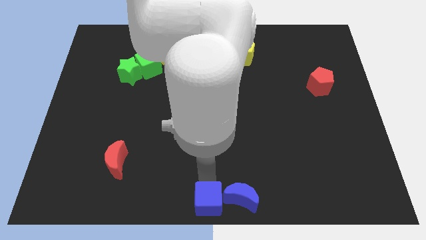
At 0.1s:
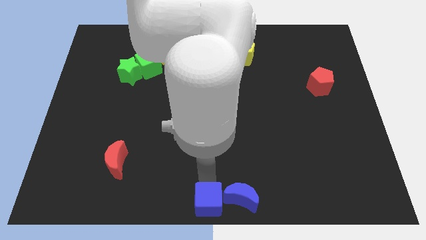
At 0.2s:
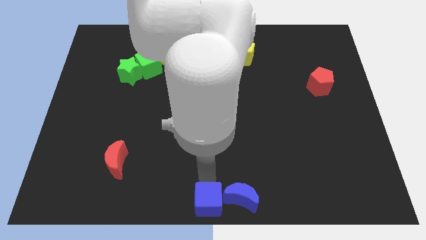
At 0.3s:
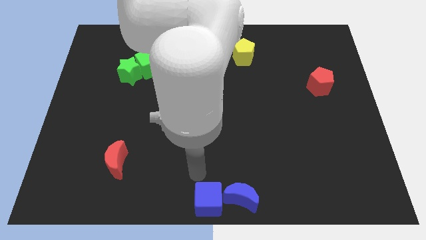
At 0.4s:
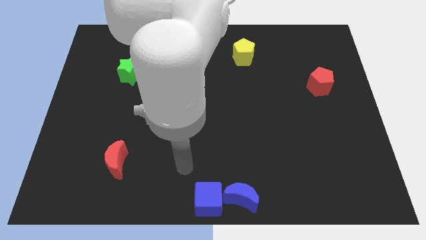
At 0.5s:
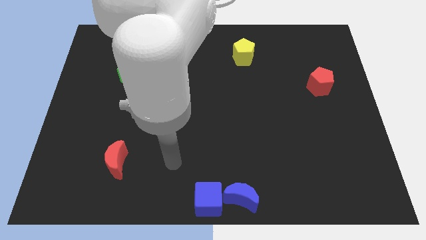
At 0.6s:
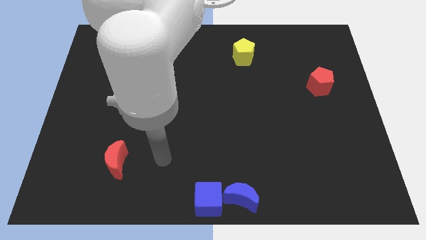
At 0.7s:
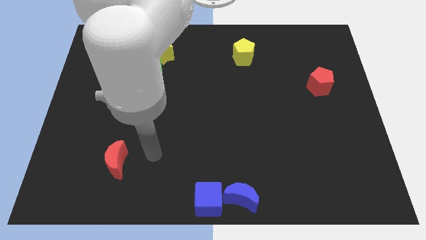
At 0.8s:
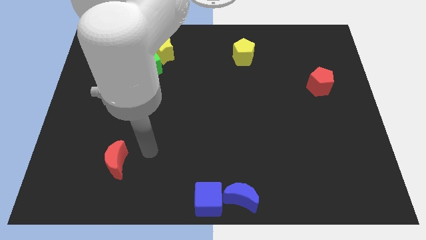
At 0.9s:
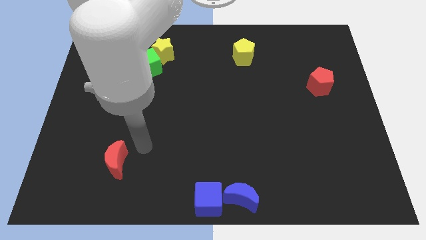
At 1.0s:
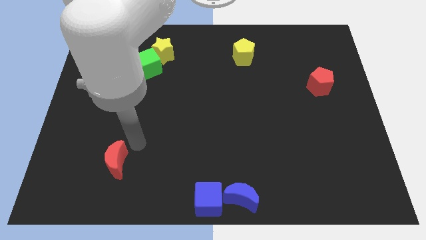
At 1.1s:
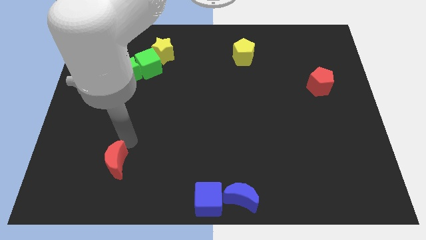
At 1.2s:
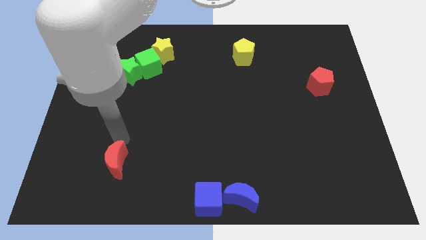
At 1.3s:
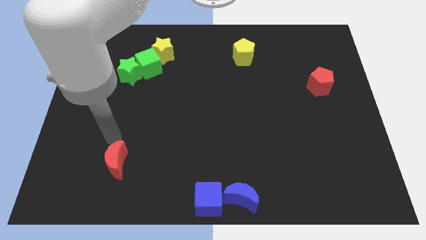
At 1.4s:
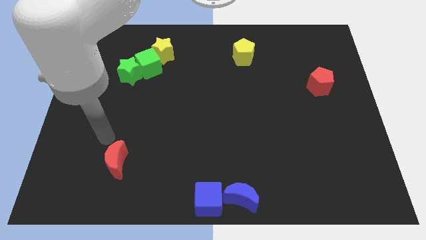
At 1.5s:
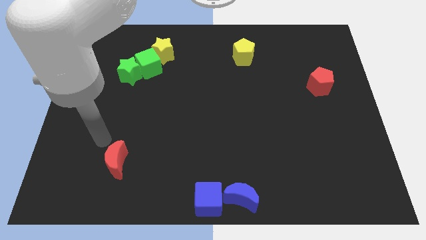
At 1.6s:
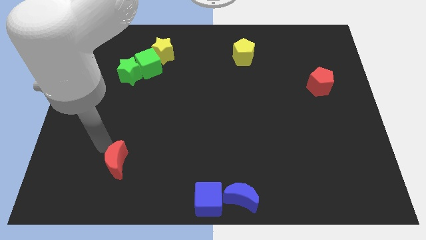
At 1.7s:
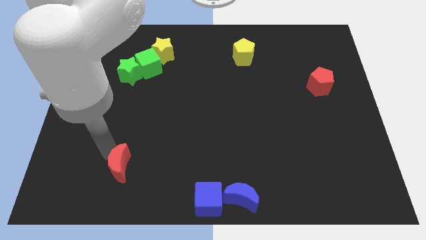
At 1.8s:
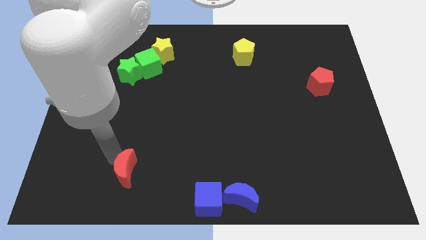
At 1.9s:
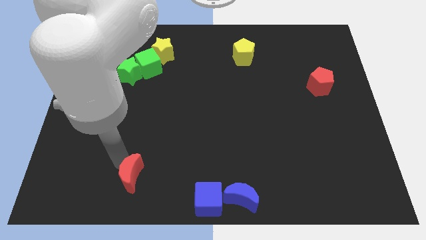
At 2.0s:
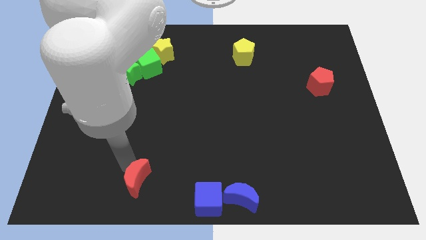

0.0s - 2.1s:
place the red crescent vertically below the green cube

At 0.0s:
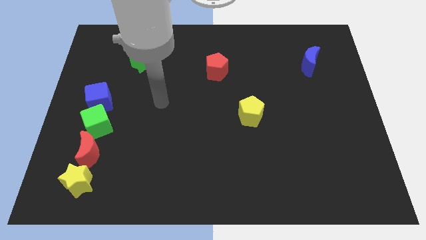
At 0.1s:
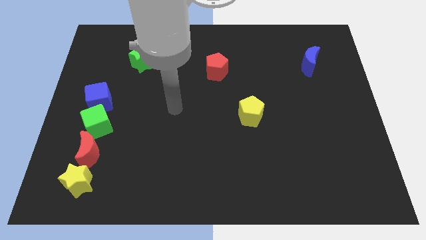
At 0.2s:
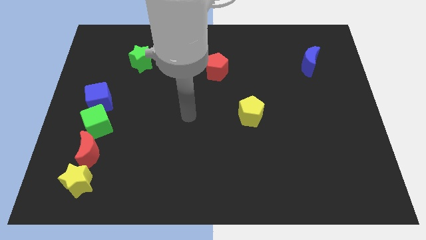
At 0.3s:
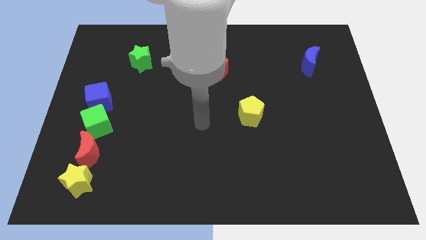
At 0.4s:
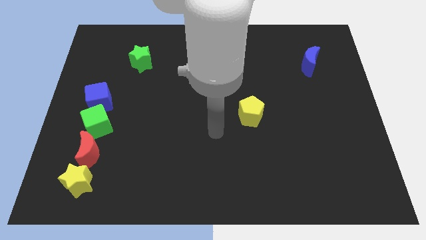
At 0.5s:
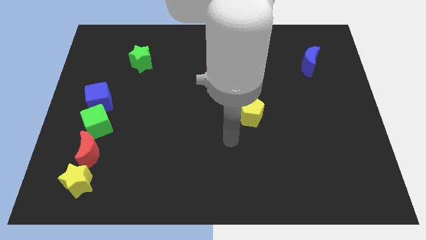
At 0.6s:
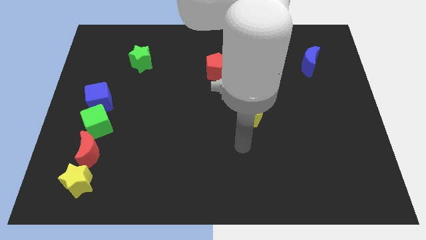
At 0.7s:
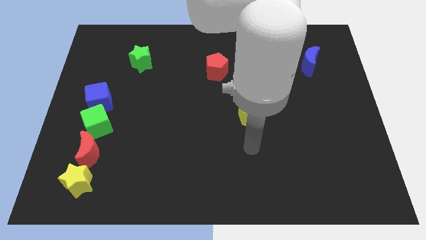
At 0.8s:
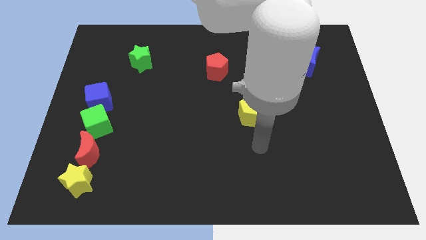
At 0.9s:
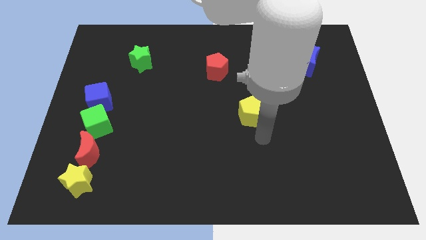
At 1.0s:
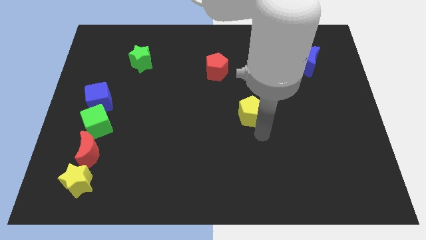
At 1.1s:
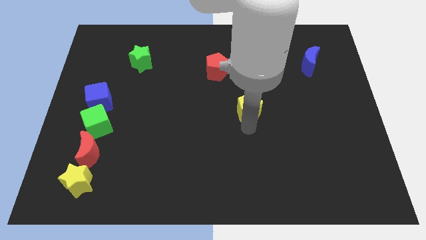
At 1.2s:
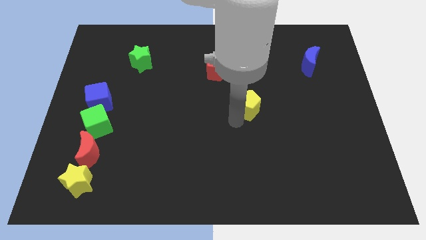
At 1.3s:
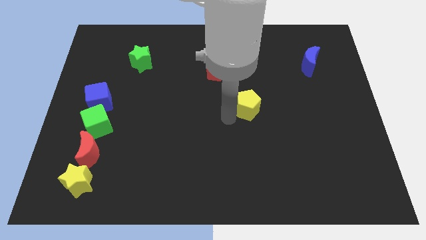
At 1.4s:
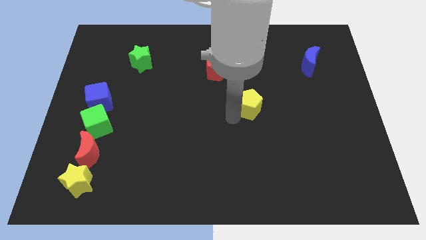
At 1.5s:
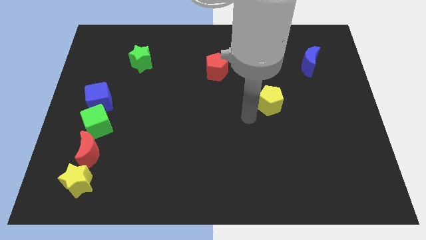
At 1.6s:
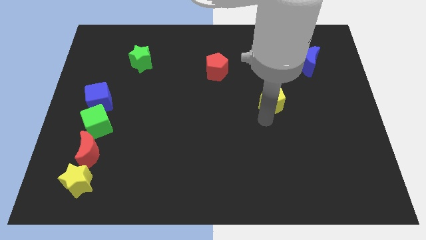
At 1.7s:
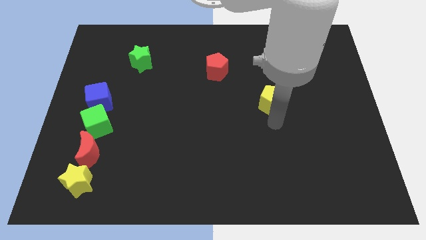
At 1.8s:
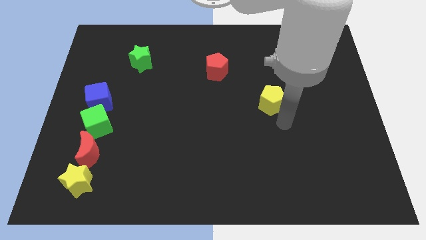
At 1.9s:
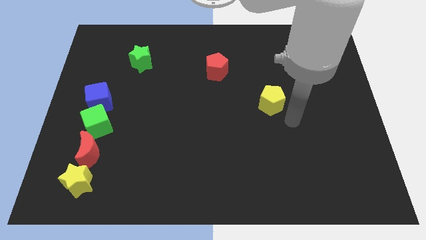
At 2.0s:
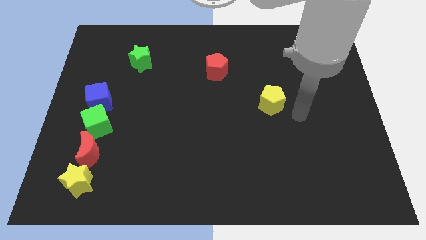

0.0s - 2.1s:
slightly move the yellow pentagon diagonal to the red pentagon

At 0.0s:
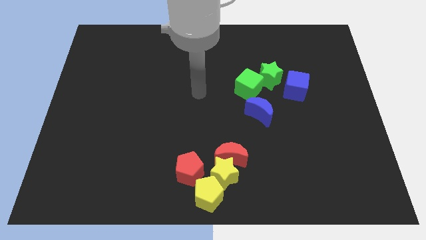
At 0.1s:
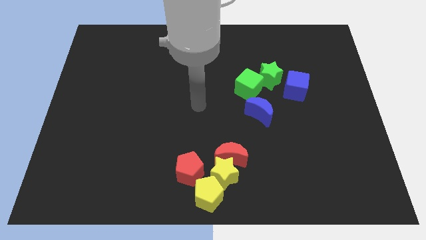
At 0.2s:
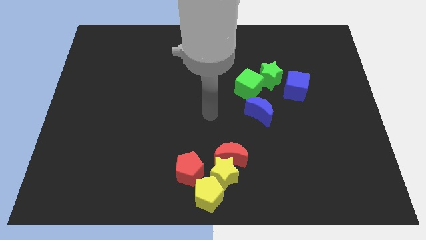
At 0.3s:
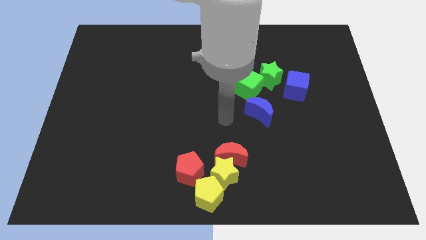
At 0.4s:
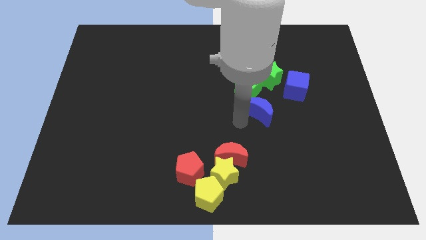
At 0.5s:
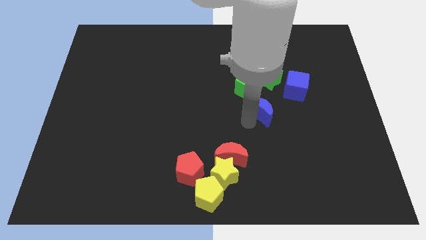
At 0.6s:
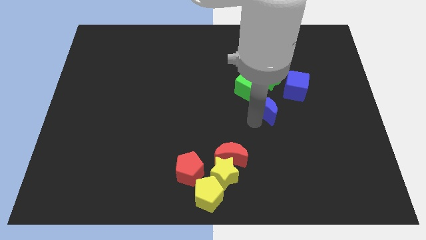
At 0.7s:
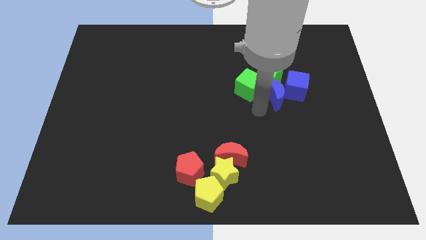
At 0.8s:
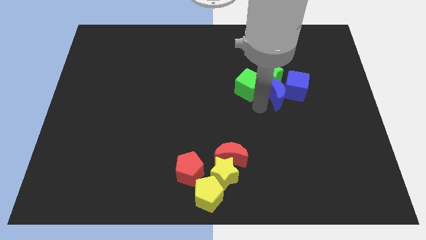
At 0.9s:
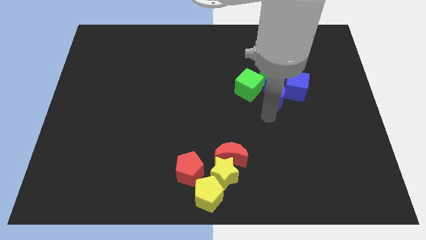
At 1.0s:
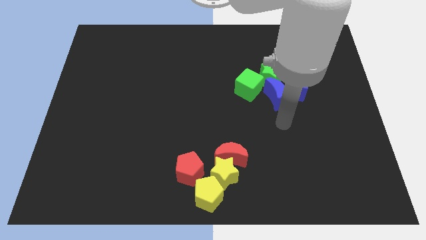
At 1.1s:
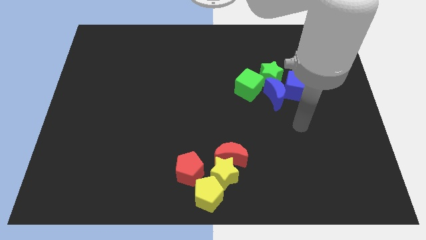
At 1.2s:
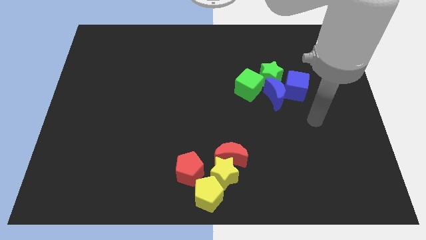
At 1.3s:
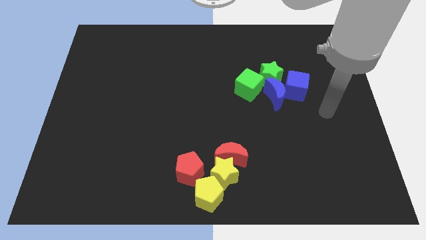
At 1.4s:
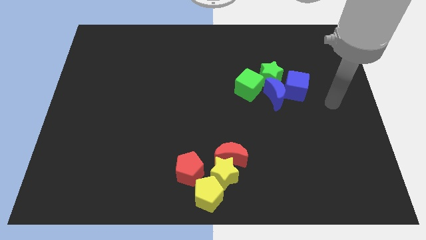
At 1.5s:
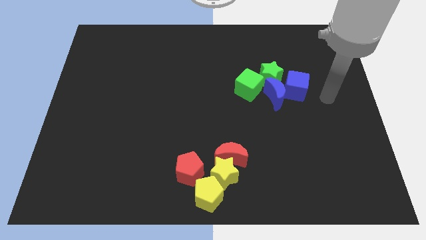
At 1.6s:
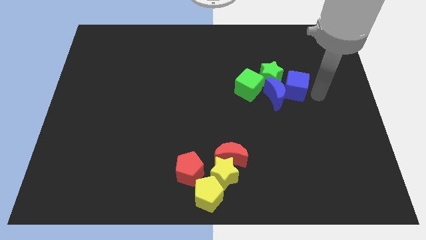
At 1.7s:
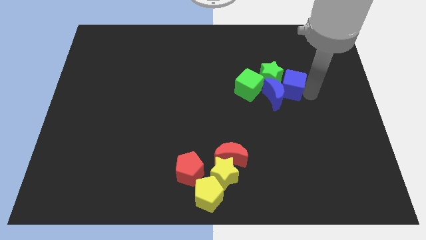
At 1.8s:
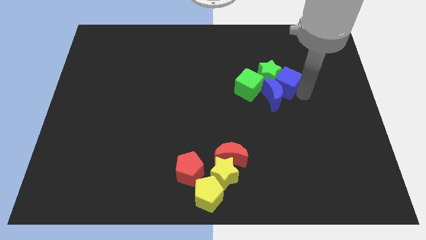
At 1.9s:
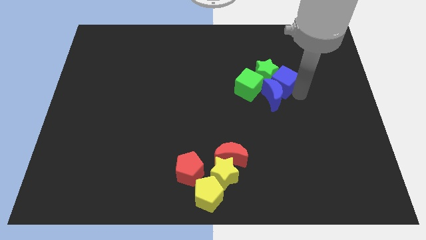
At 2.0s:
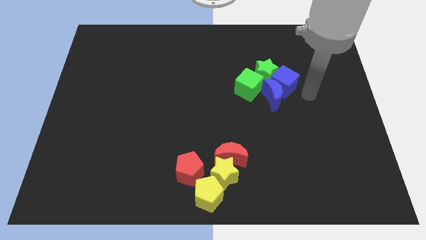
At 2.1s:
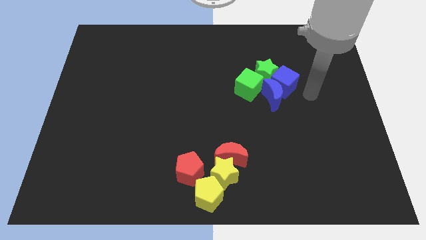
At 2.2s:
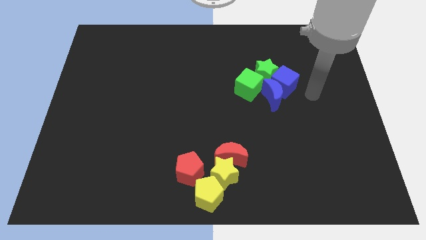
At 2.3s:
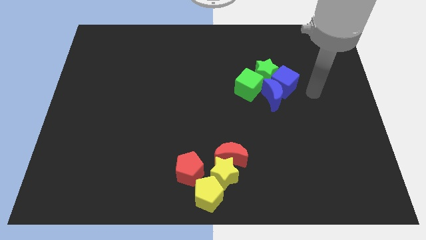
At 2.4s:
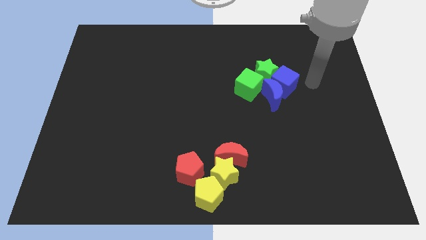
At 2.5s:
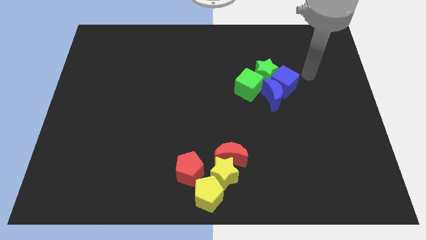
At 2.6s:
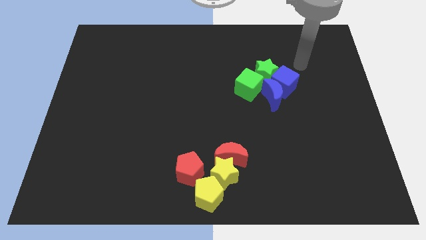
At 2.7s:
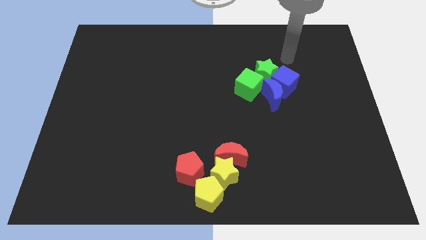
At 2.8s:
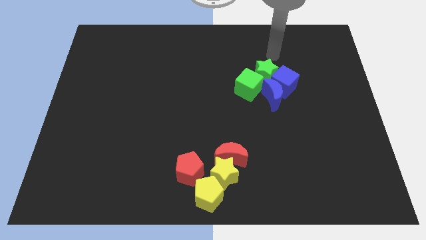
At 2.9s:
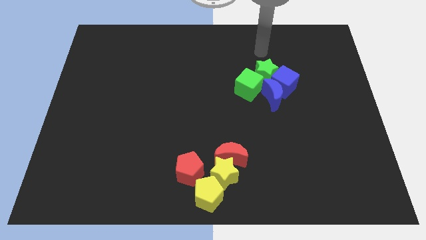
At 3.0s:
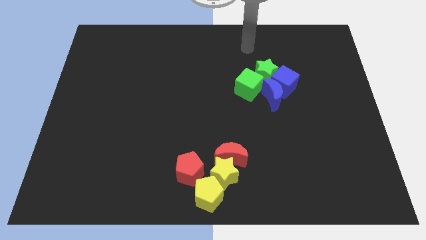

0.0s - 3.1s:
push the blue moon into the blue cube

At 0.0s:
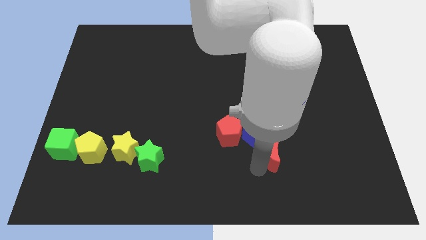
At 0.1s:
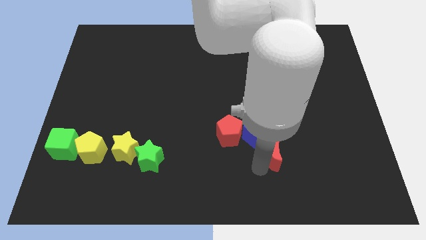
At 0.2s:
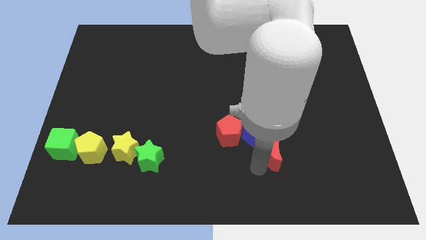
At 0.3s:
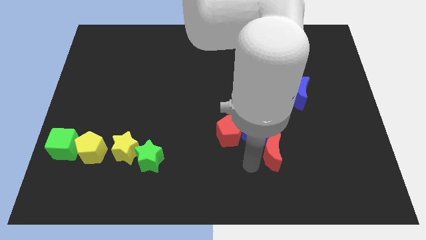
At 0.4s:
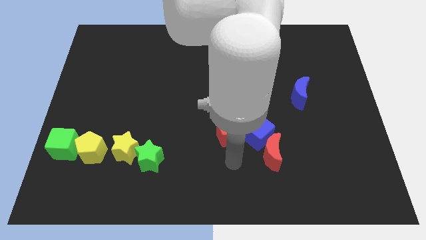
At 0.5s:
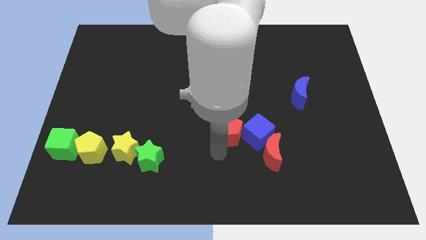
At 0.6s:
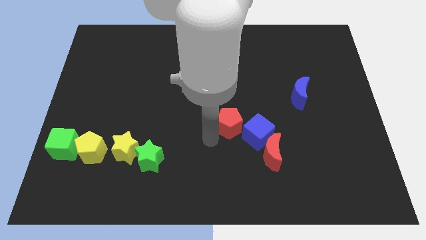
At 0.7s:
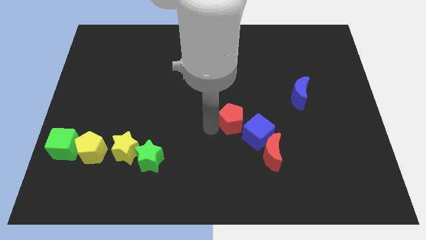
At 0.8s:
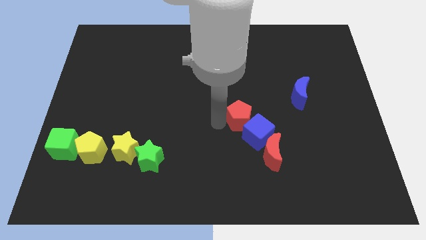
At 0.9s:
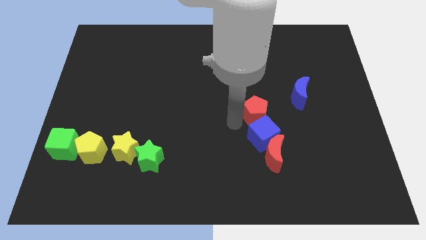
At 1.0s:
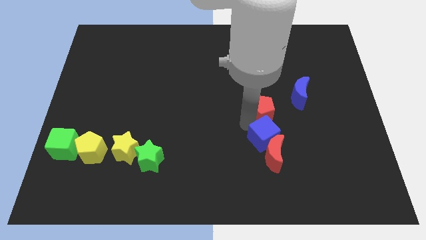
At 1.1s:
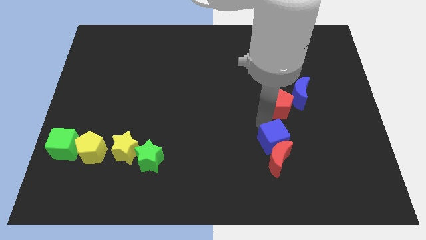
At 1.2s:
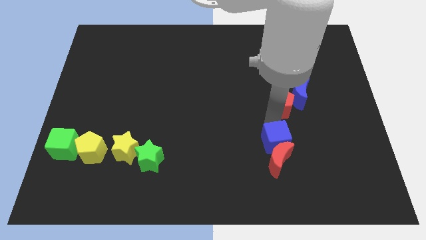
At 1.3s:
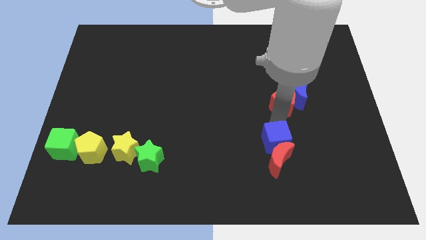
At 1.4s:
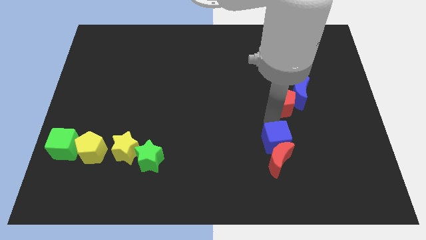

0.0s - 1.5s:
place the red pentagon to the left of the blue crescent

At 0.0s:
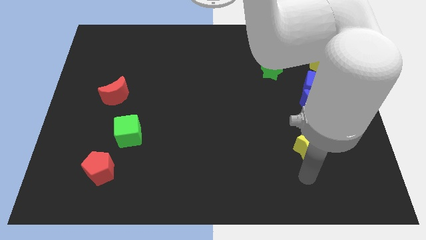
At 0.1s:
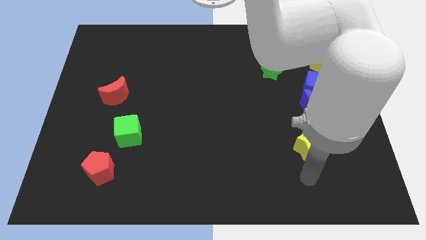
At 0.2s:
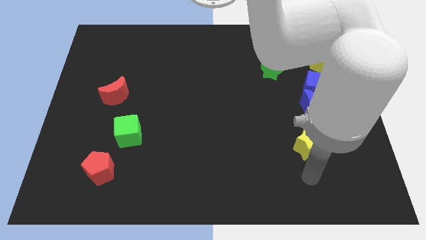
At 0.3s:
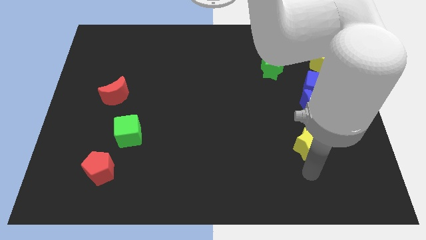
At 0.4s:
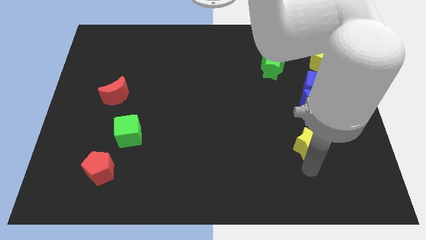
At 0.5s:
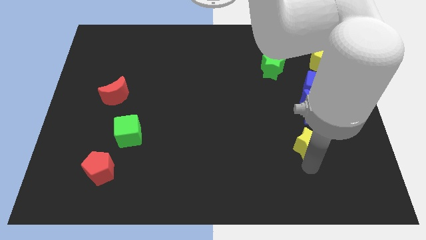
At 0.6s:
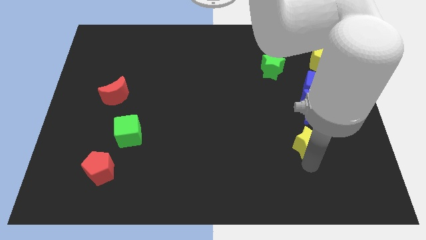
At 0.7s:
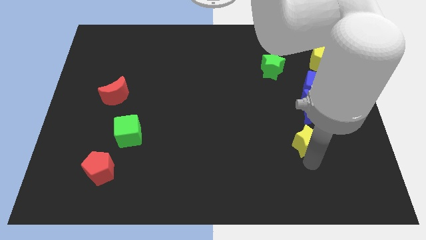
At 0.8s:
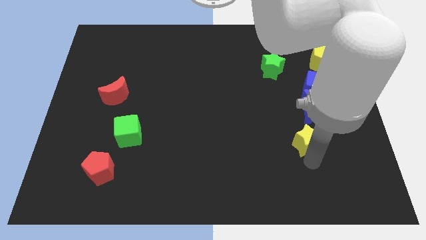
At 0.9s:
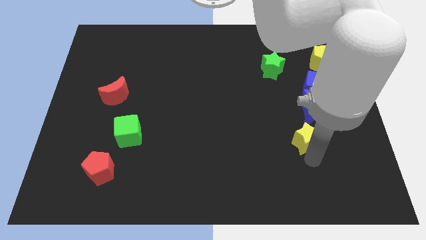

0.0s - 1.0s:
push yellow star towards blue moon
